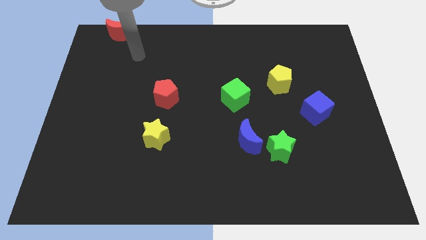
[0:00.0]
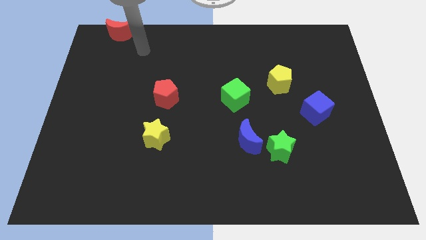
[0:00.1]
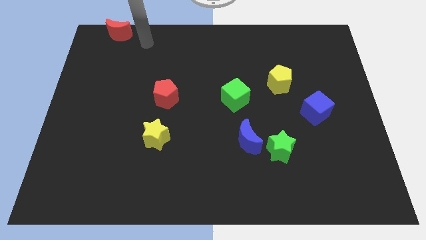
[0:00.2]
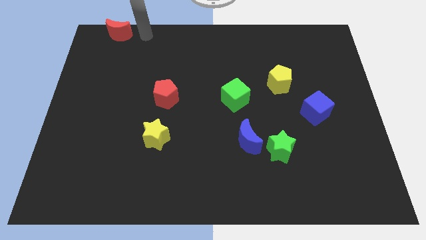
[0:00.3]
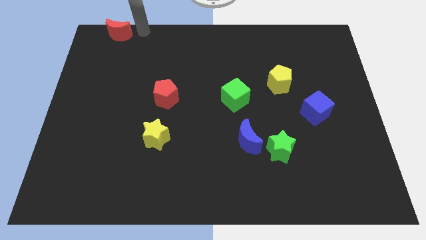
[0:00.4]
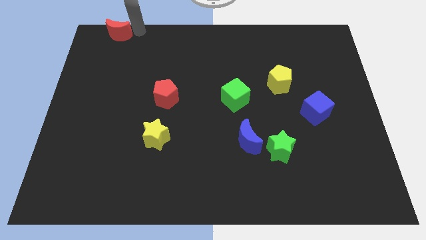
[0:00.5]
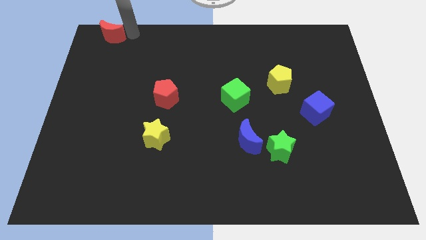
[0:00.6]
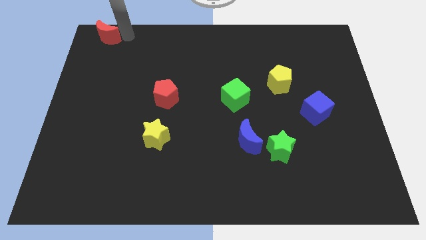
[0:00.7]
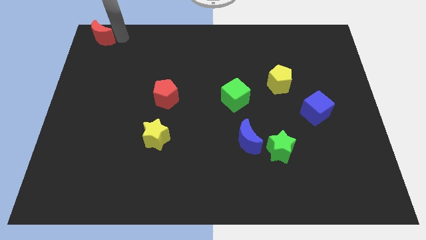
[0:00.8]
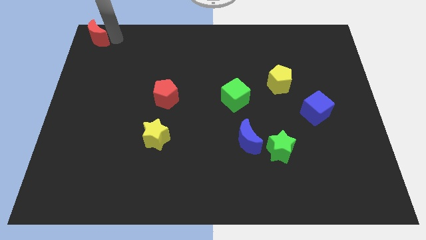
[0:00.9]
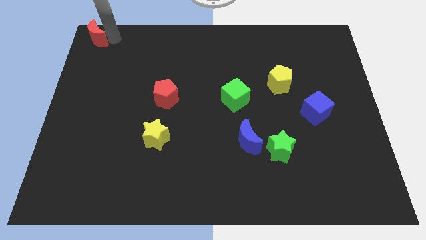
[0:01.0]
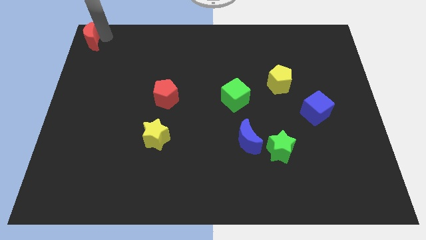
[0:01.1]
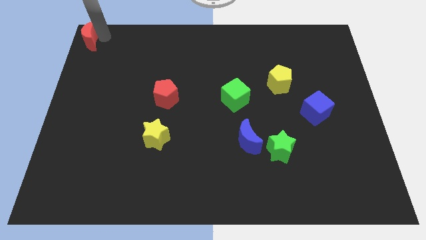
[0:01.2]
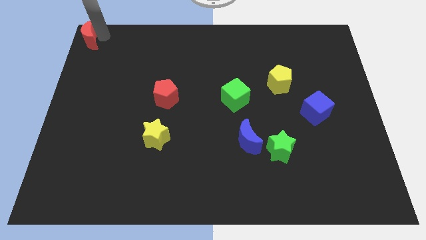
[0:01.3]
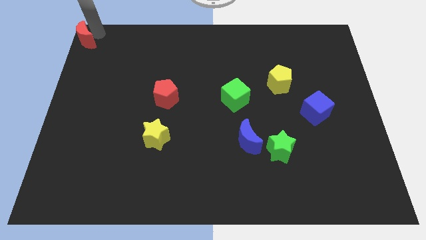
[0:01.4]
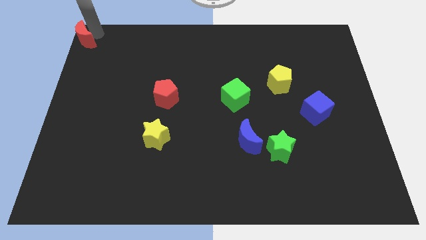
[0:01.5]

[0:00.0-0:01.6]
place the red moon to the top left corner

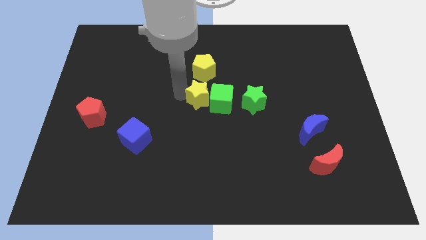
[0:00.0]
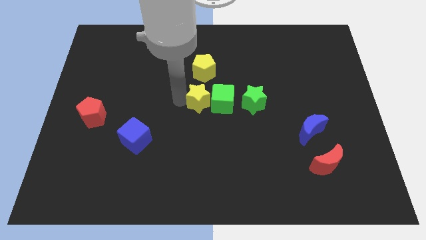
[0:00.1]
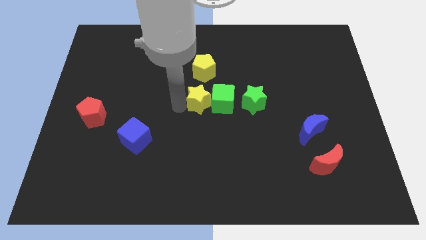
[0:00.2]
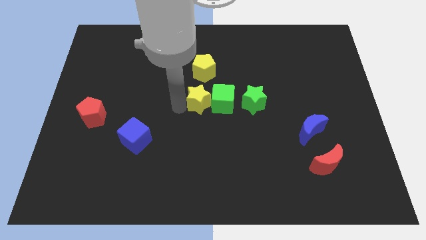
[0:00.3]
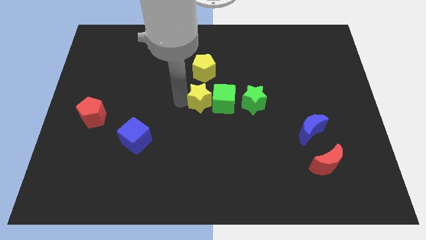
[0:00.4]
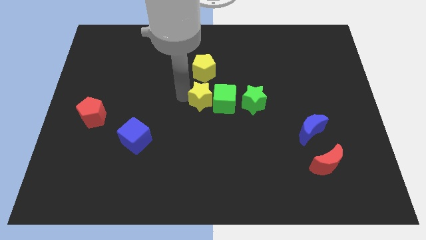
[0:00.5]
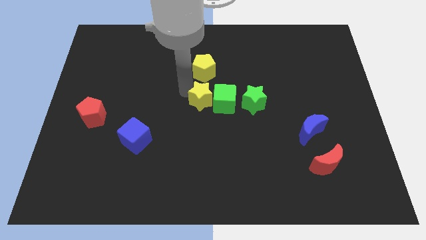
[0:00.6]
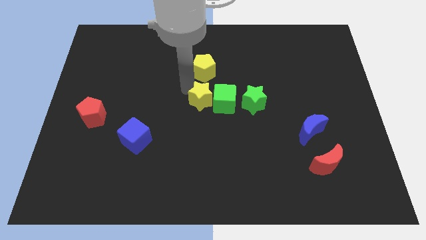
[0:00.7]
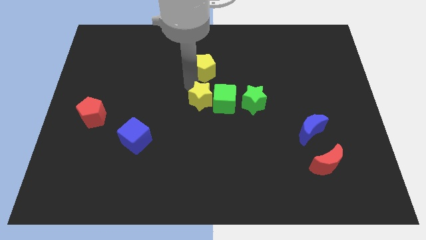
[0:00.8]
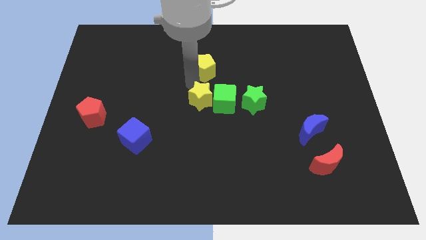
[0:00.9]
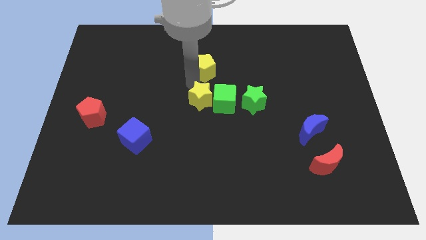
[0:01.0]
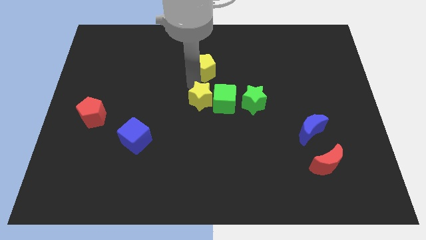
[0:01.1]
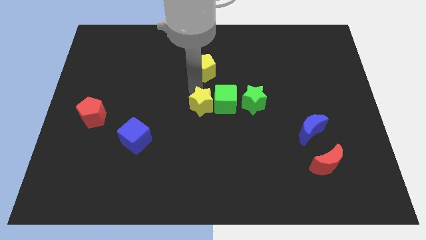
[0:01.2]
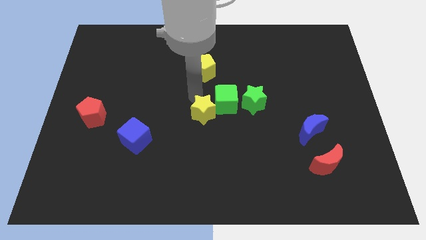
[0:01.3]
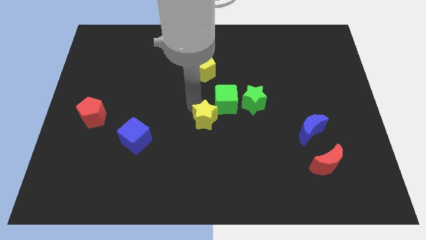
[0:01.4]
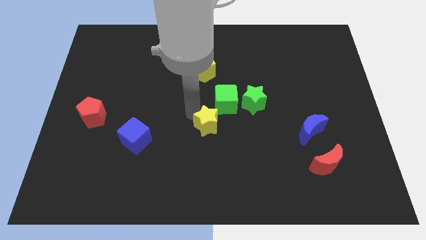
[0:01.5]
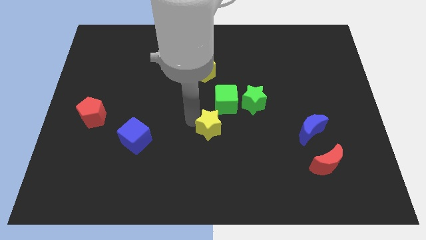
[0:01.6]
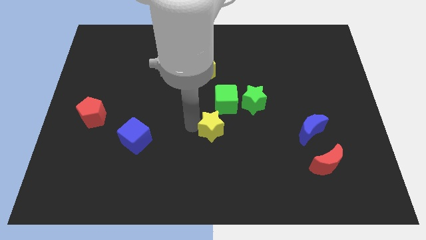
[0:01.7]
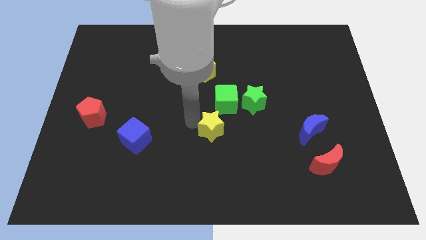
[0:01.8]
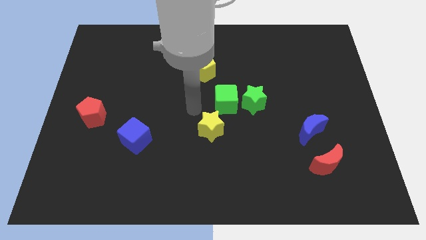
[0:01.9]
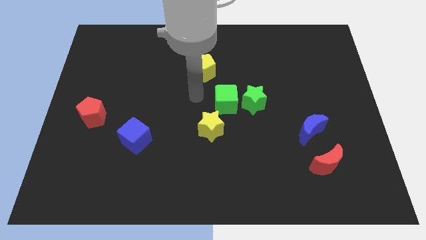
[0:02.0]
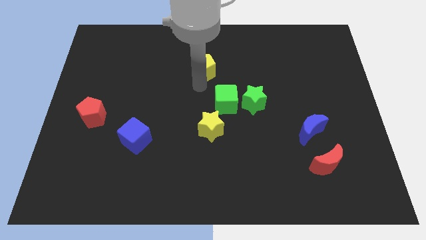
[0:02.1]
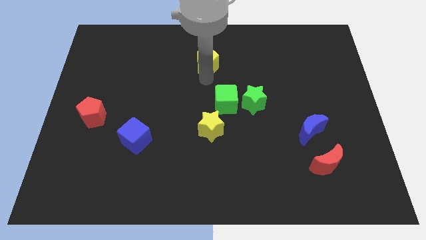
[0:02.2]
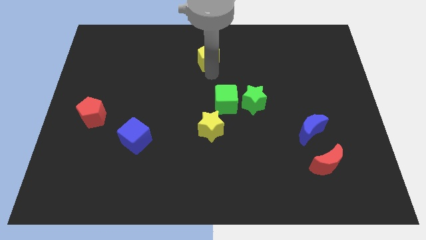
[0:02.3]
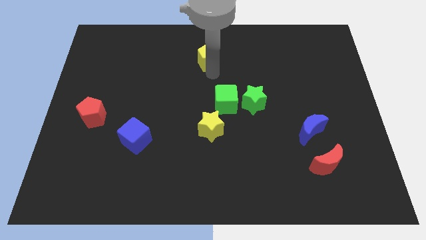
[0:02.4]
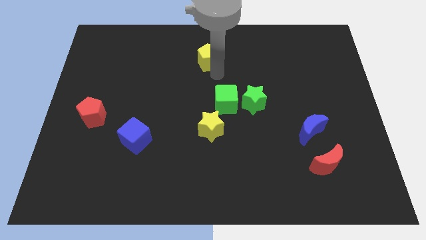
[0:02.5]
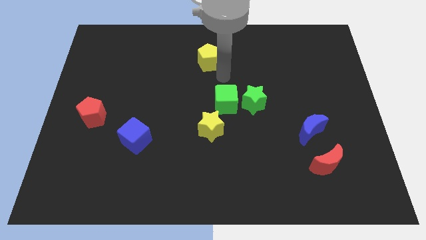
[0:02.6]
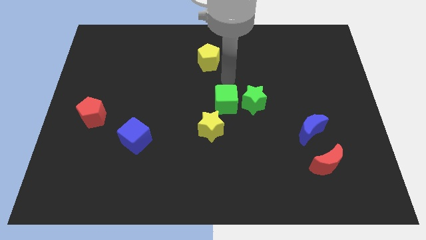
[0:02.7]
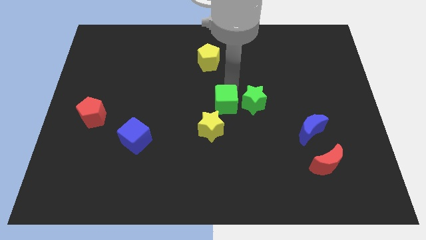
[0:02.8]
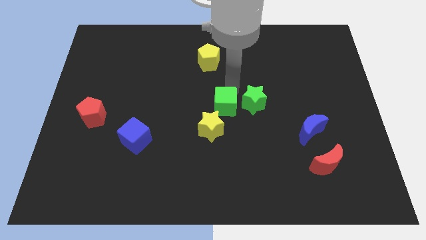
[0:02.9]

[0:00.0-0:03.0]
separate yellow star from green cube

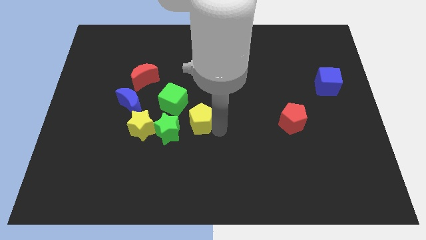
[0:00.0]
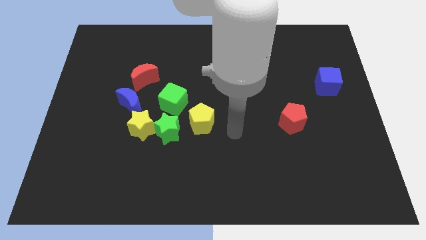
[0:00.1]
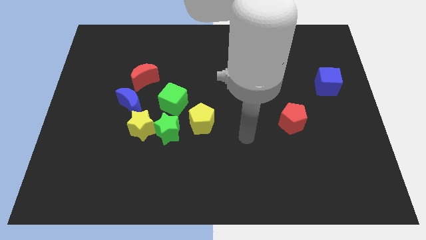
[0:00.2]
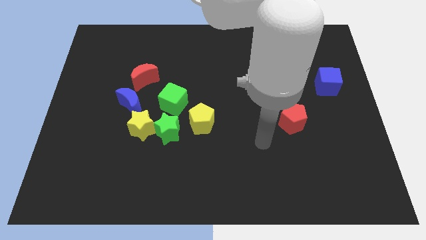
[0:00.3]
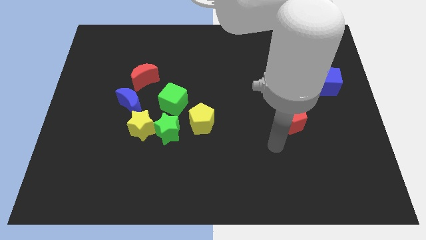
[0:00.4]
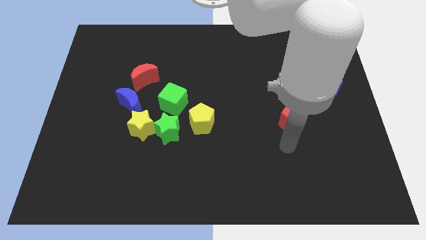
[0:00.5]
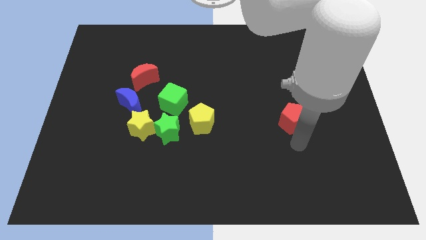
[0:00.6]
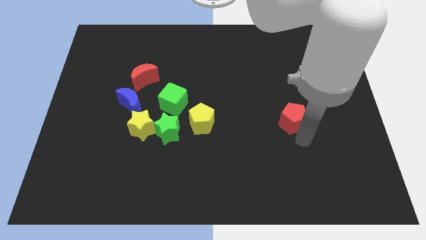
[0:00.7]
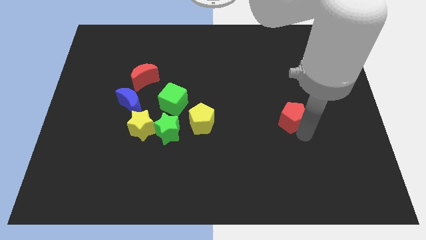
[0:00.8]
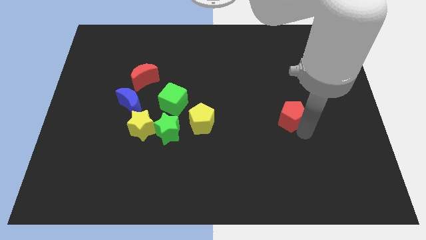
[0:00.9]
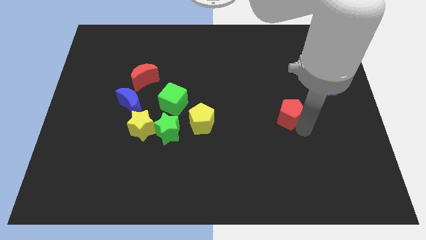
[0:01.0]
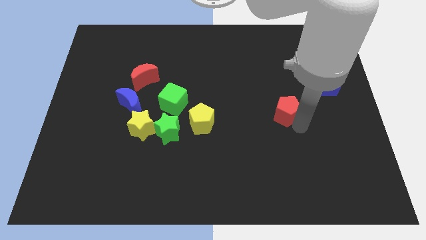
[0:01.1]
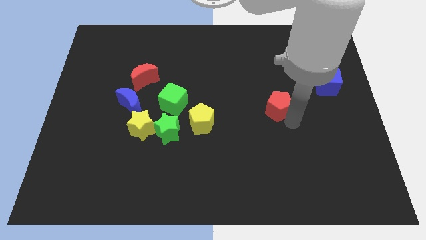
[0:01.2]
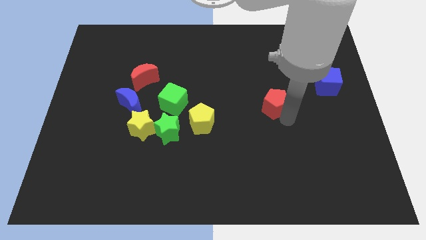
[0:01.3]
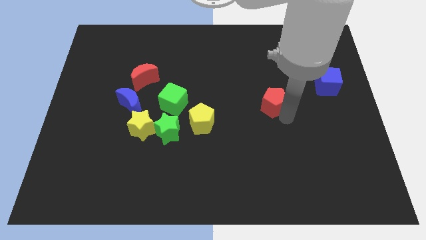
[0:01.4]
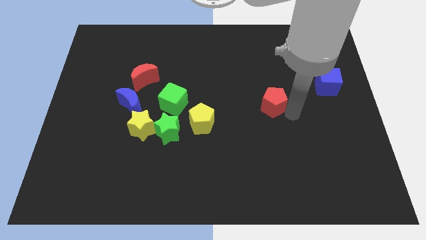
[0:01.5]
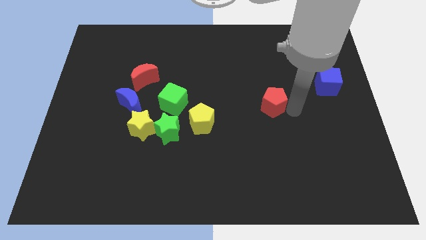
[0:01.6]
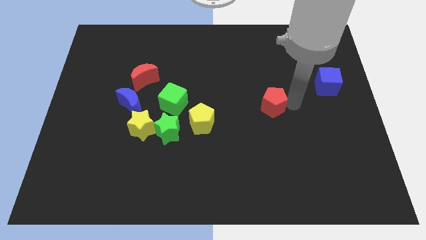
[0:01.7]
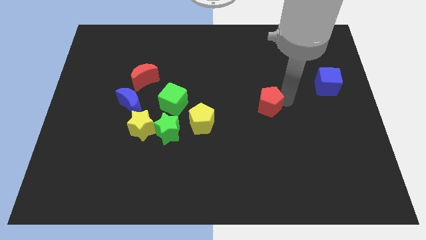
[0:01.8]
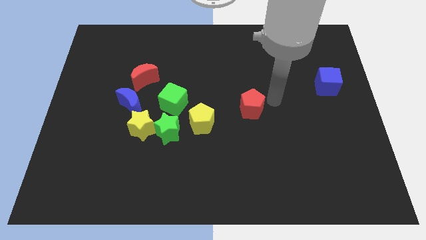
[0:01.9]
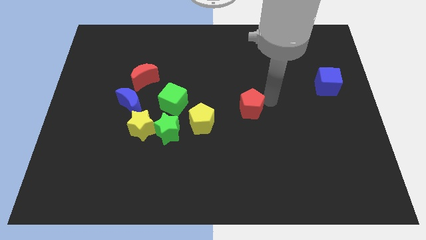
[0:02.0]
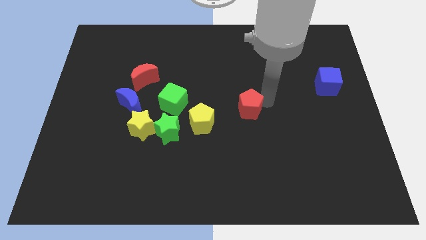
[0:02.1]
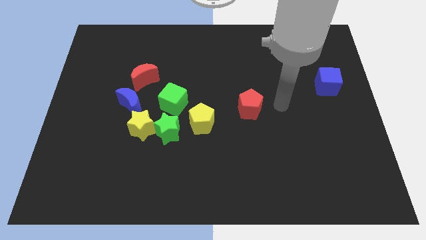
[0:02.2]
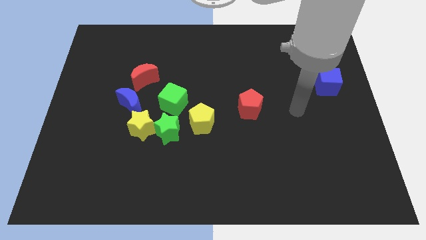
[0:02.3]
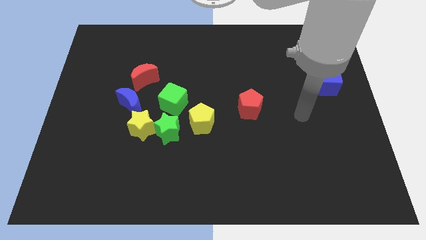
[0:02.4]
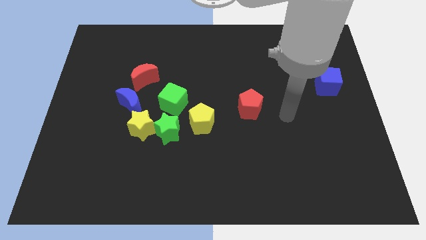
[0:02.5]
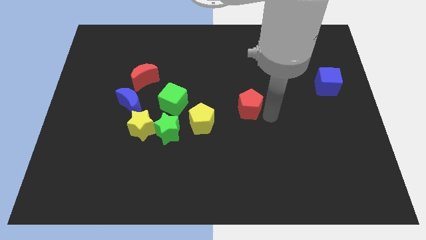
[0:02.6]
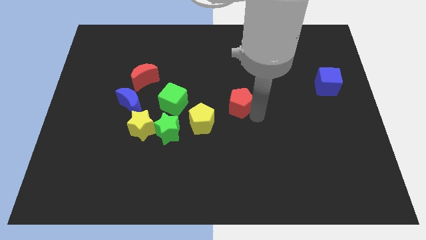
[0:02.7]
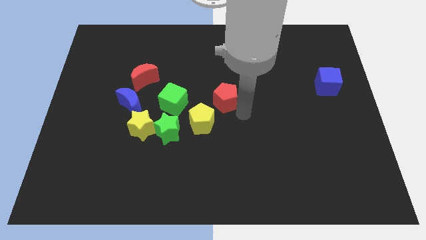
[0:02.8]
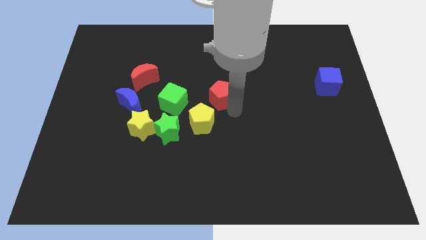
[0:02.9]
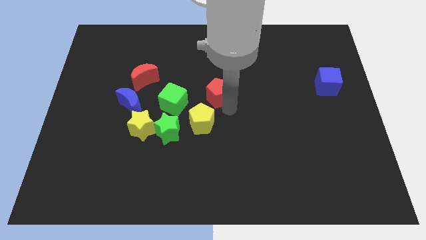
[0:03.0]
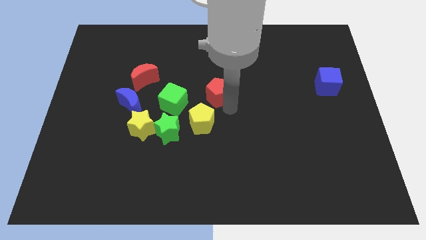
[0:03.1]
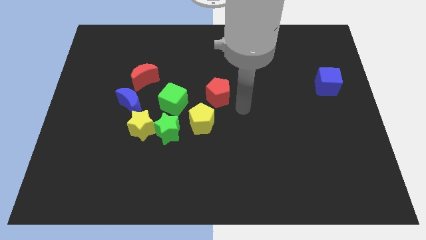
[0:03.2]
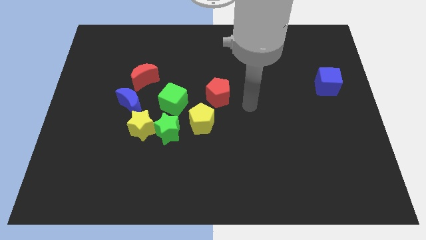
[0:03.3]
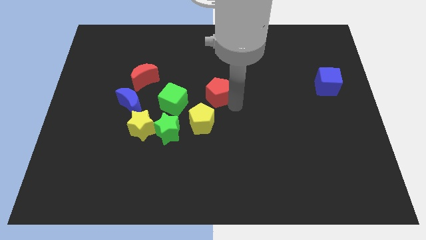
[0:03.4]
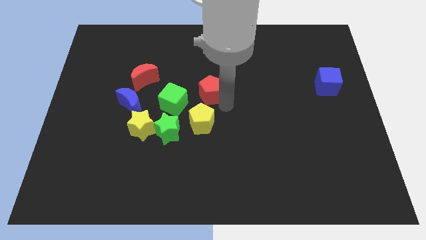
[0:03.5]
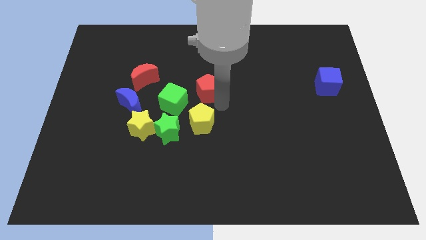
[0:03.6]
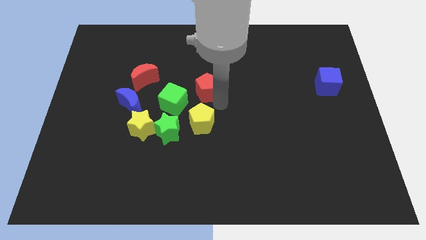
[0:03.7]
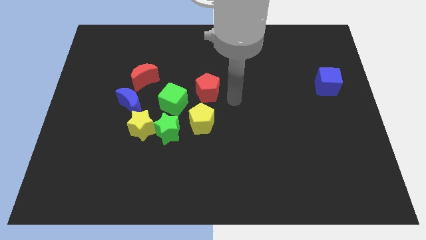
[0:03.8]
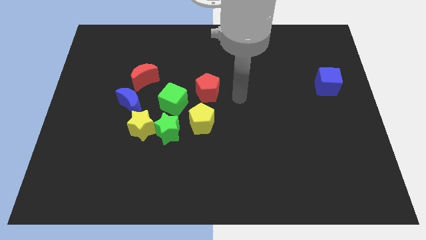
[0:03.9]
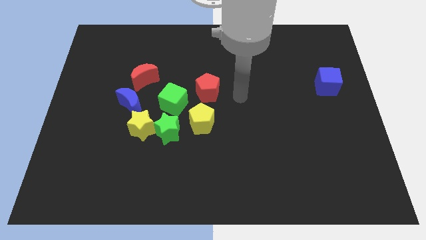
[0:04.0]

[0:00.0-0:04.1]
place the red pentagon to the right side of green cube

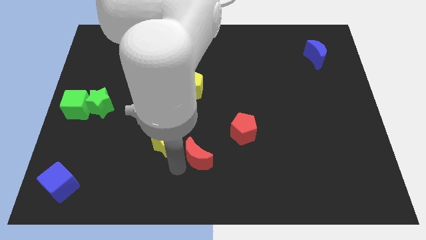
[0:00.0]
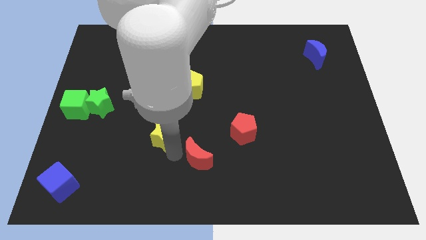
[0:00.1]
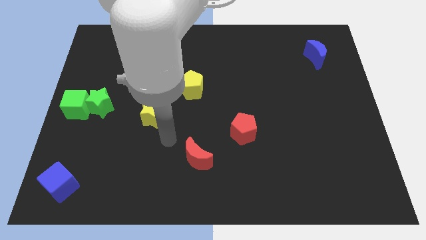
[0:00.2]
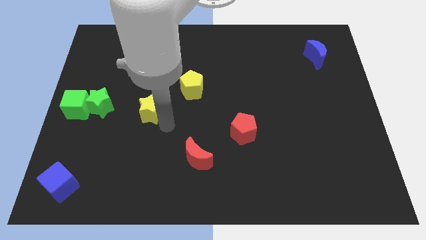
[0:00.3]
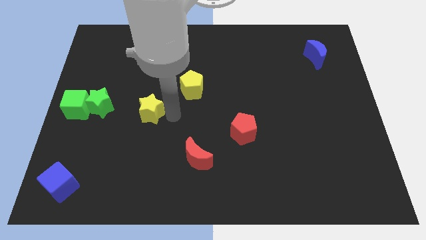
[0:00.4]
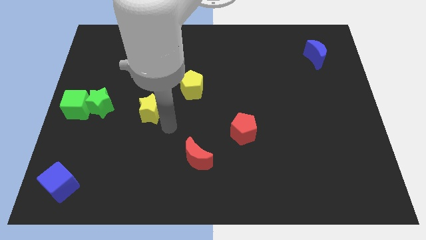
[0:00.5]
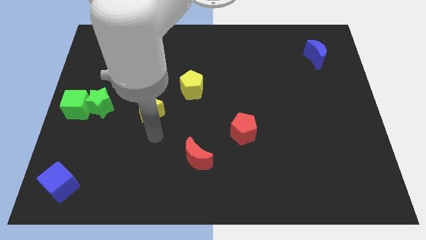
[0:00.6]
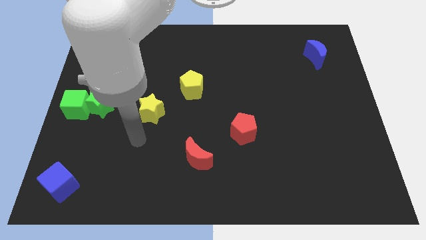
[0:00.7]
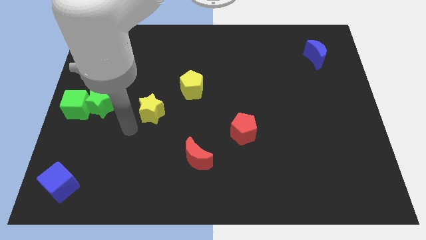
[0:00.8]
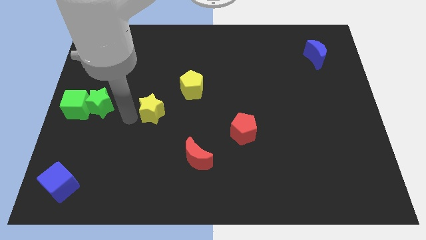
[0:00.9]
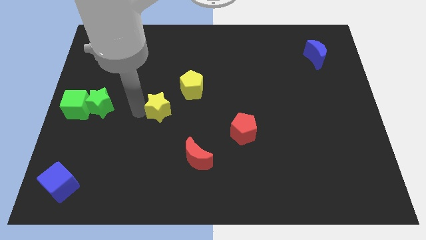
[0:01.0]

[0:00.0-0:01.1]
push the yellow star diagonally to the bottom left of the yellow pentagon
